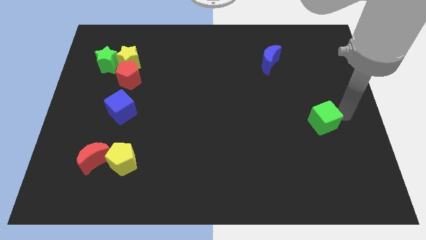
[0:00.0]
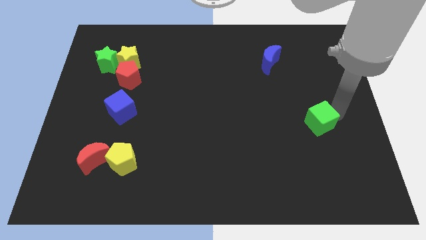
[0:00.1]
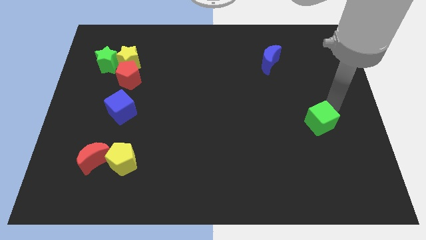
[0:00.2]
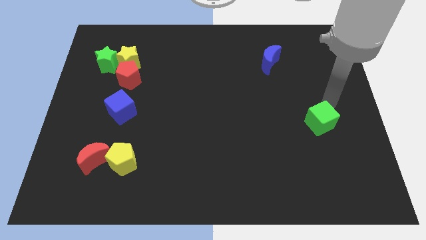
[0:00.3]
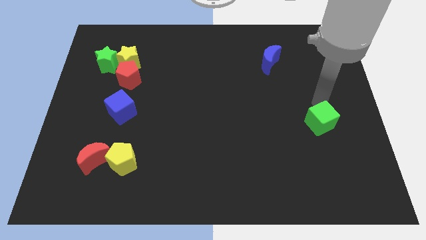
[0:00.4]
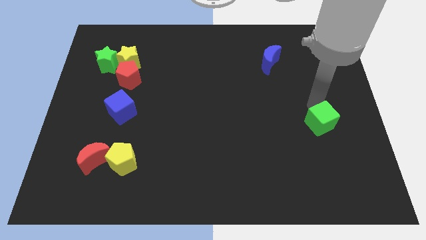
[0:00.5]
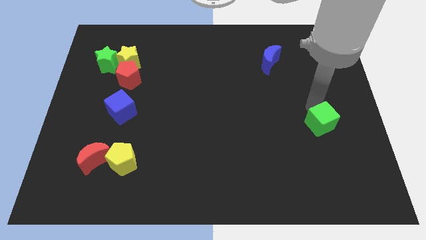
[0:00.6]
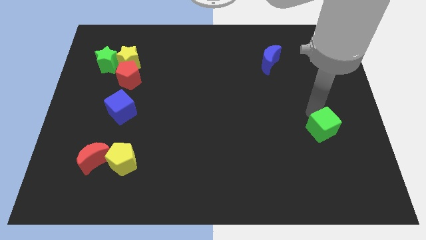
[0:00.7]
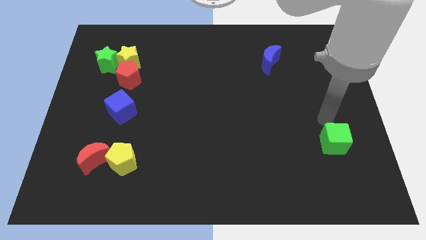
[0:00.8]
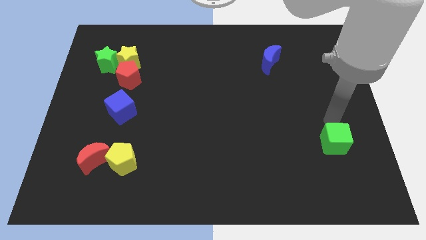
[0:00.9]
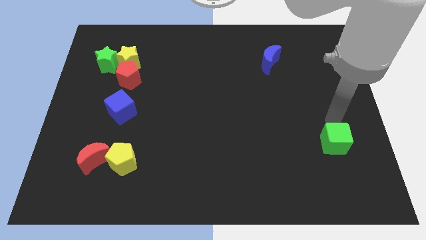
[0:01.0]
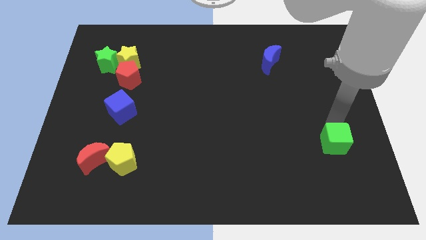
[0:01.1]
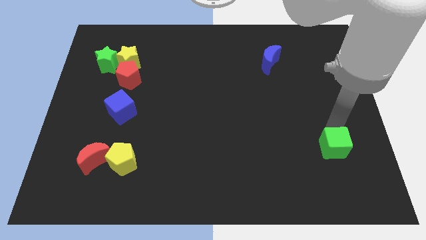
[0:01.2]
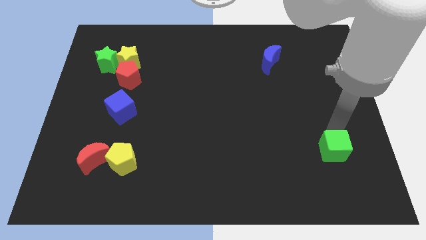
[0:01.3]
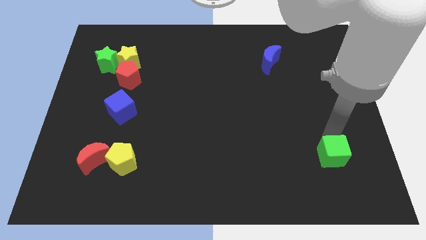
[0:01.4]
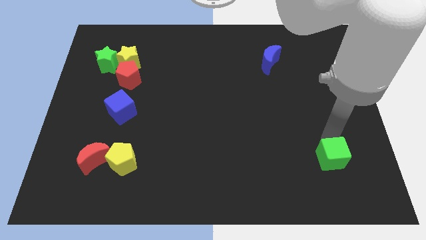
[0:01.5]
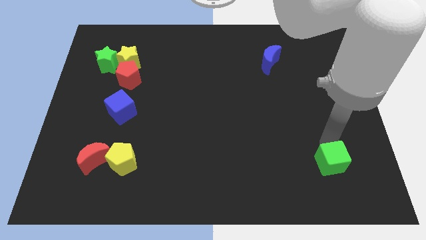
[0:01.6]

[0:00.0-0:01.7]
place the green cube horizontally to the right side of the yellow pentagon

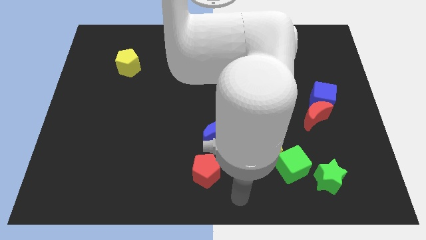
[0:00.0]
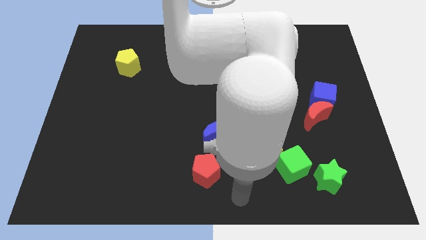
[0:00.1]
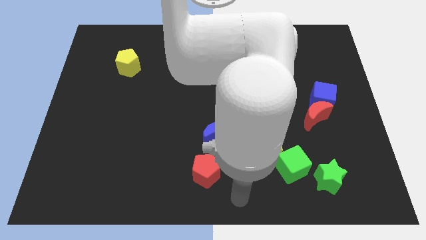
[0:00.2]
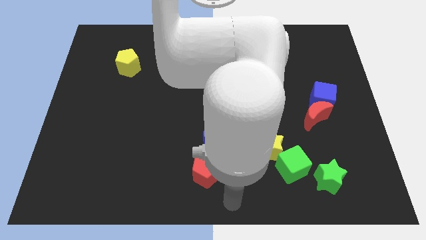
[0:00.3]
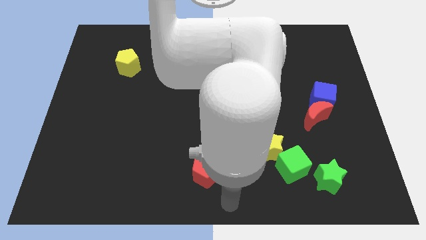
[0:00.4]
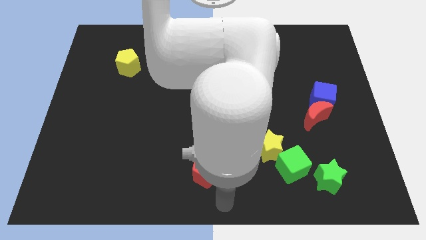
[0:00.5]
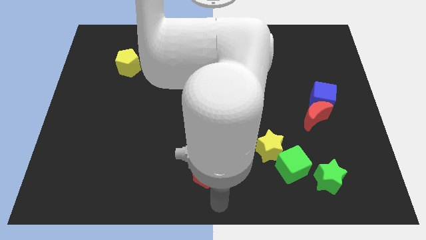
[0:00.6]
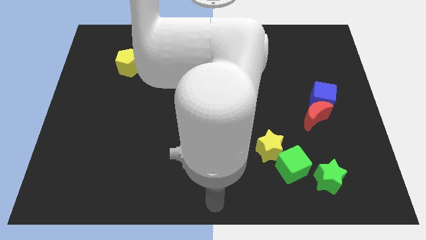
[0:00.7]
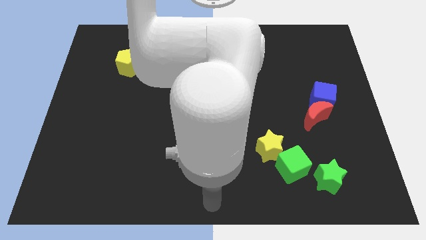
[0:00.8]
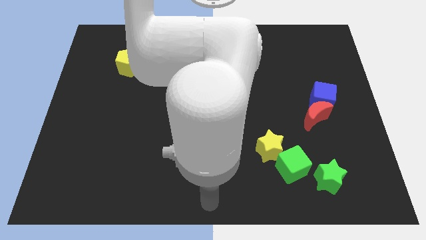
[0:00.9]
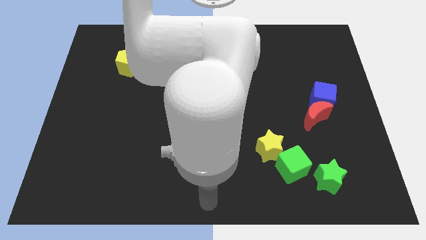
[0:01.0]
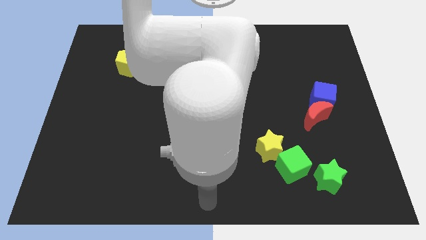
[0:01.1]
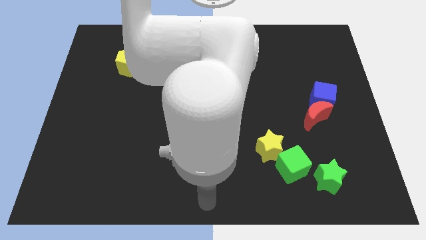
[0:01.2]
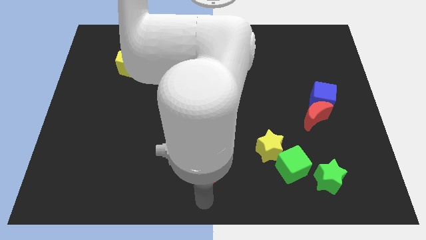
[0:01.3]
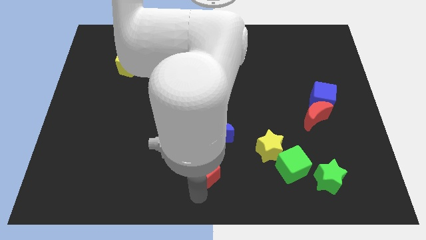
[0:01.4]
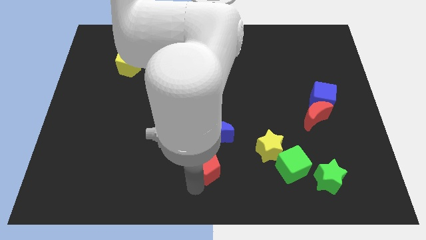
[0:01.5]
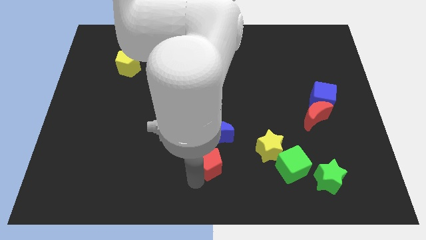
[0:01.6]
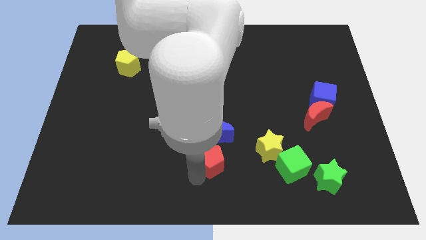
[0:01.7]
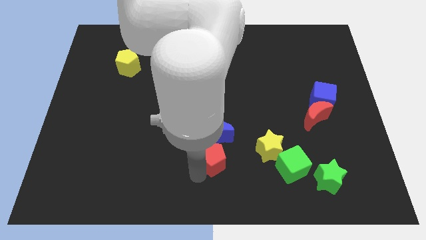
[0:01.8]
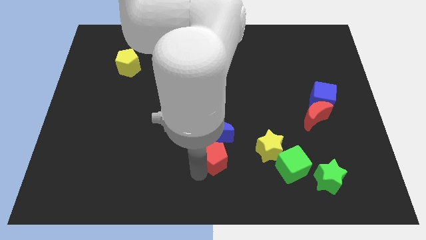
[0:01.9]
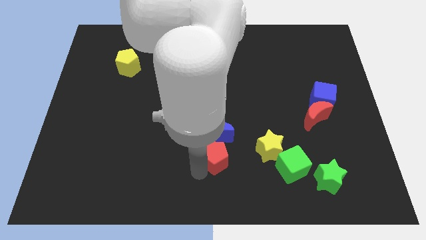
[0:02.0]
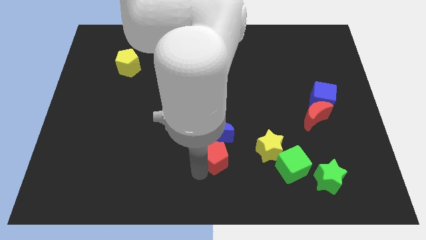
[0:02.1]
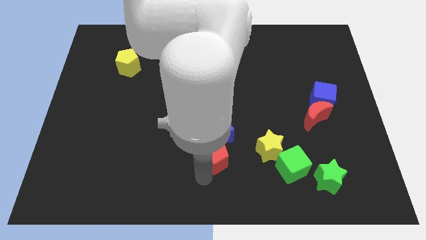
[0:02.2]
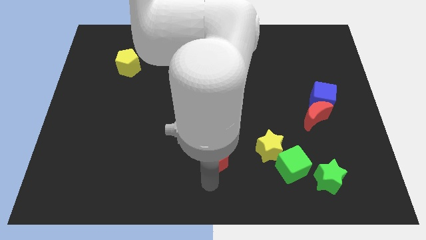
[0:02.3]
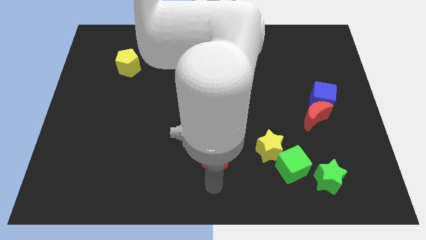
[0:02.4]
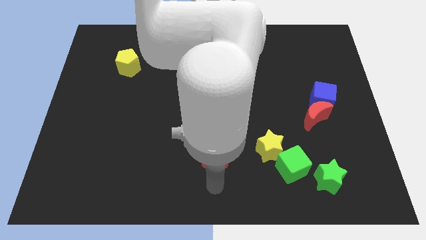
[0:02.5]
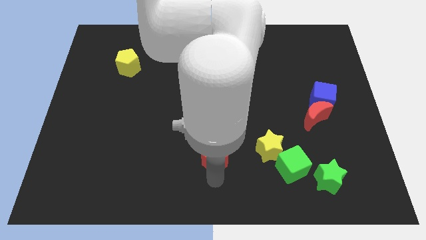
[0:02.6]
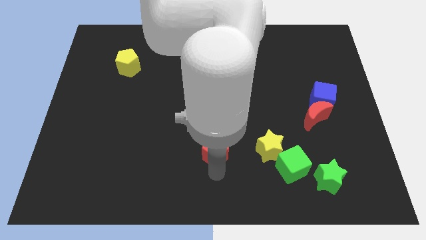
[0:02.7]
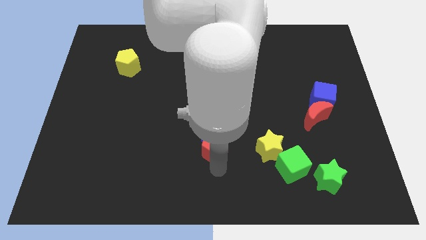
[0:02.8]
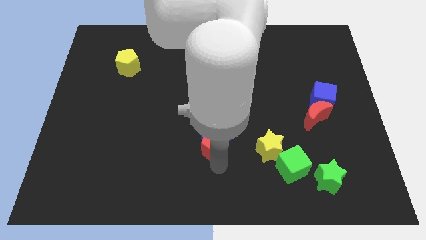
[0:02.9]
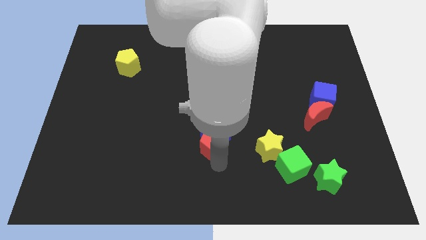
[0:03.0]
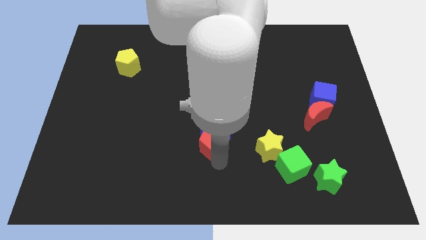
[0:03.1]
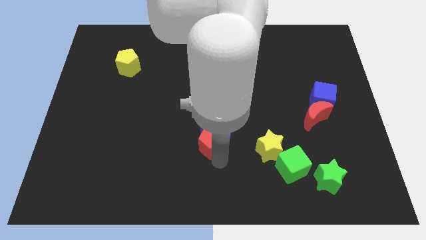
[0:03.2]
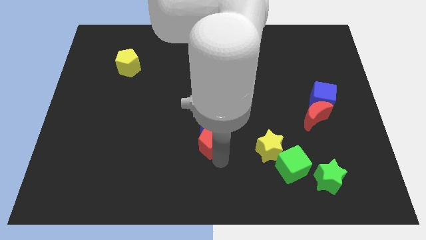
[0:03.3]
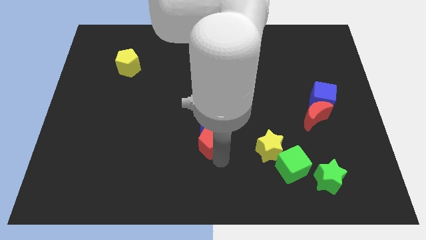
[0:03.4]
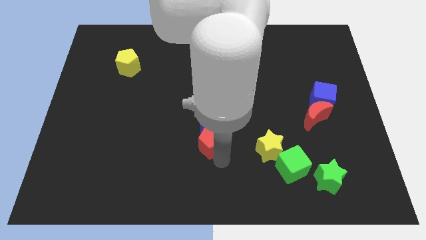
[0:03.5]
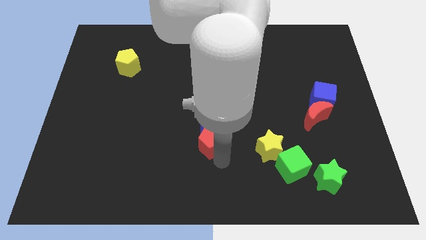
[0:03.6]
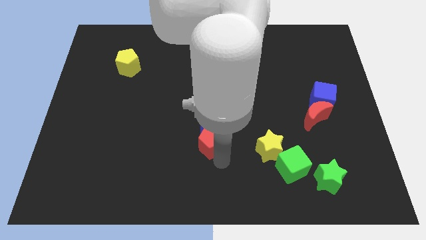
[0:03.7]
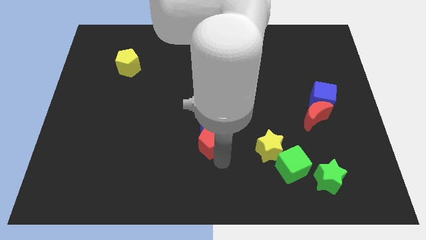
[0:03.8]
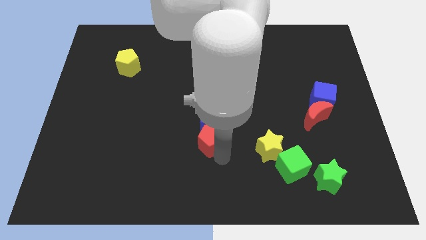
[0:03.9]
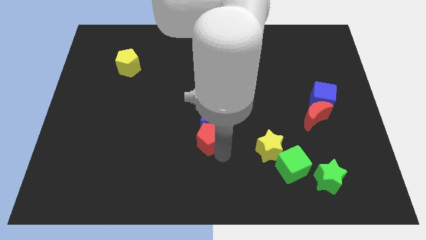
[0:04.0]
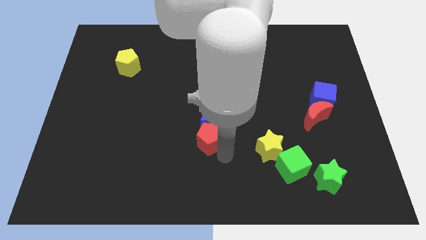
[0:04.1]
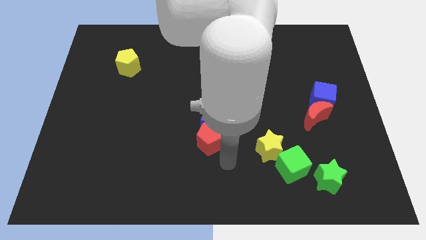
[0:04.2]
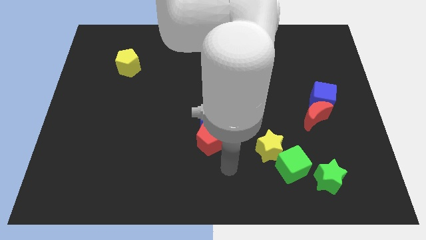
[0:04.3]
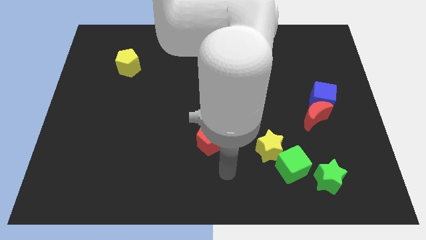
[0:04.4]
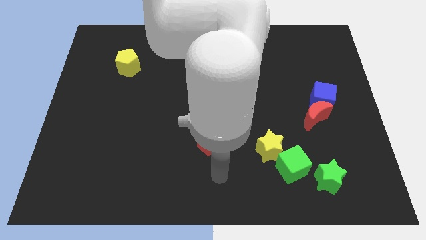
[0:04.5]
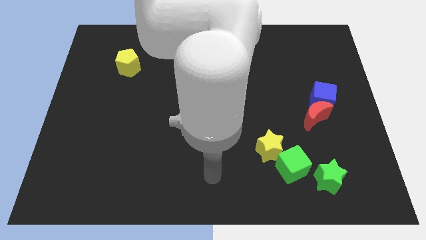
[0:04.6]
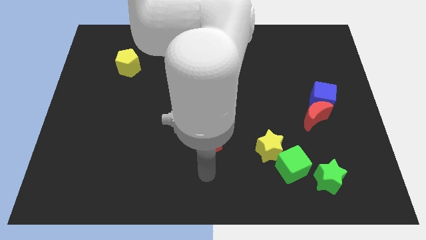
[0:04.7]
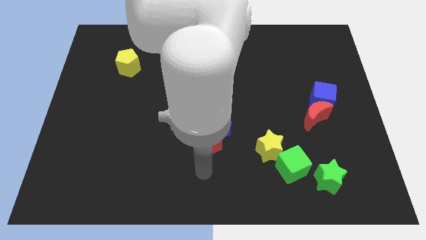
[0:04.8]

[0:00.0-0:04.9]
move red pentagon into blue crescent

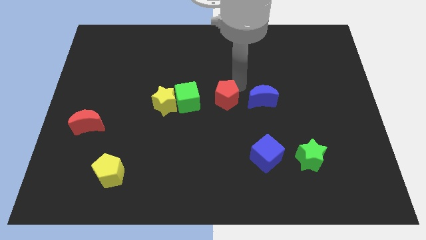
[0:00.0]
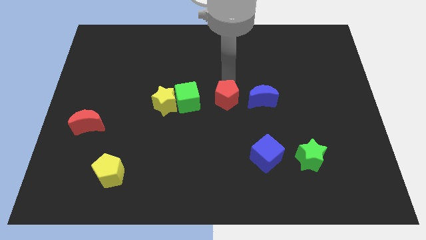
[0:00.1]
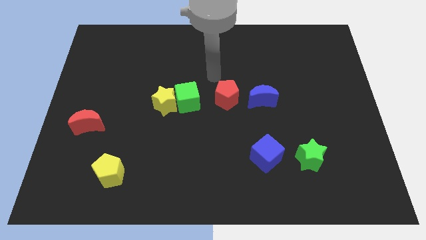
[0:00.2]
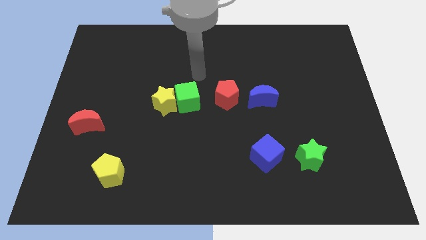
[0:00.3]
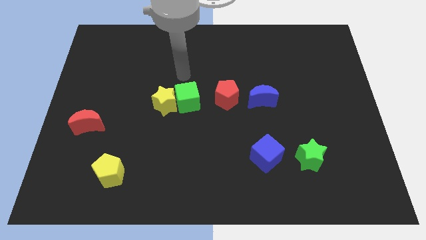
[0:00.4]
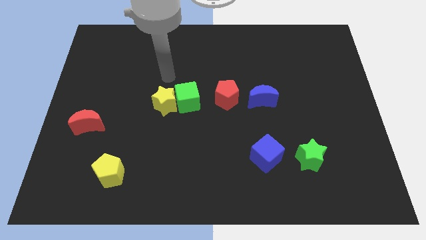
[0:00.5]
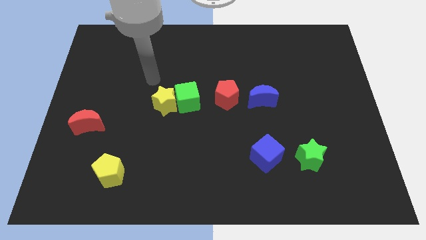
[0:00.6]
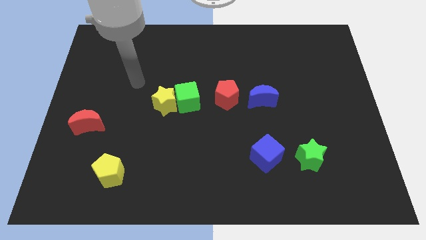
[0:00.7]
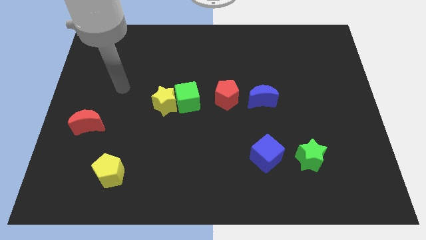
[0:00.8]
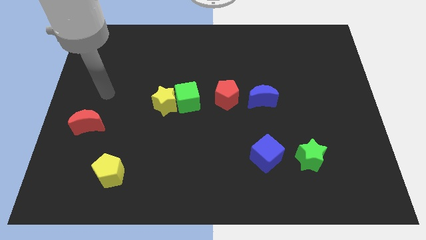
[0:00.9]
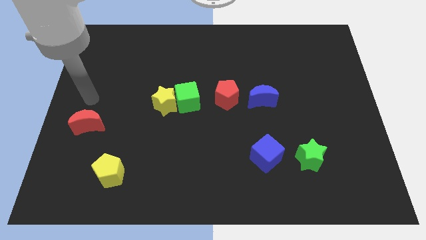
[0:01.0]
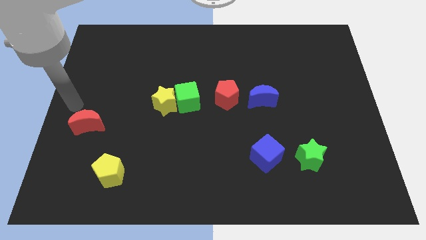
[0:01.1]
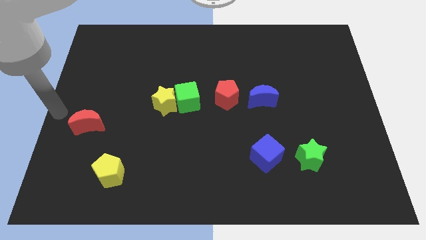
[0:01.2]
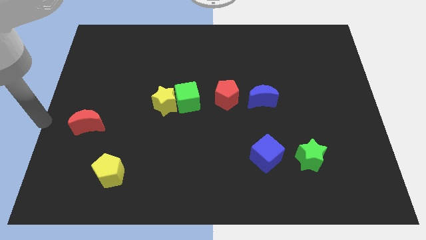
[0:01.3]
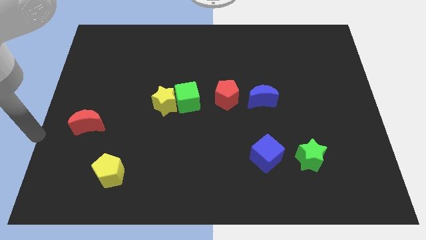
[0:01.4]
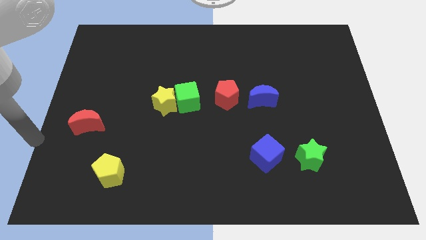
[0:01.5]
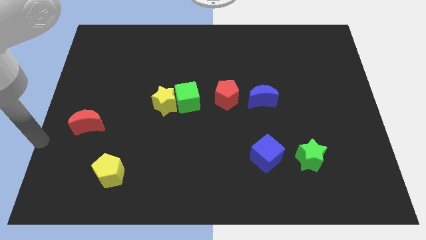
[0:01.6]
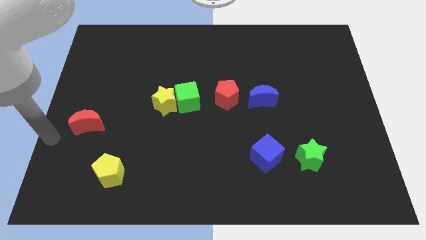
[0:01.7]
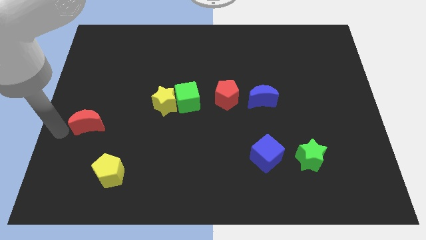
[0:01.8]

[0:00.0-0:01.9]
drag you arm to the left side of the red moon

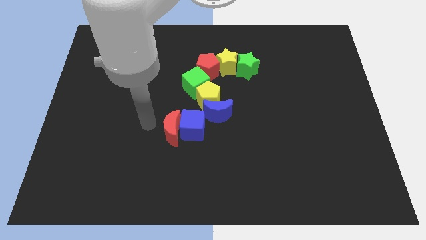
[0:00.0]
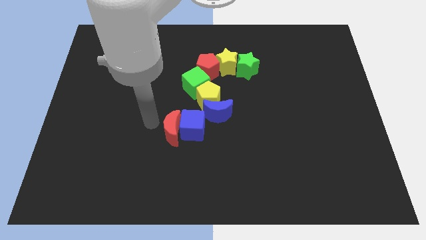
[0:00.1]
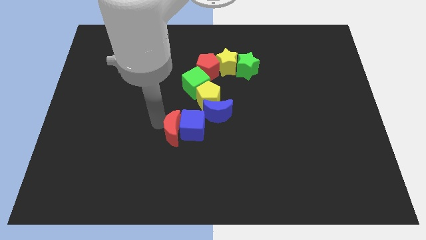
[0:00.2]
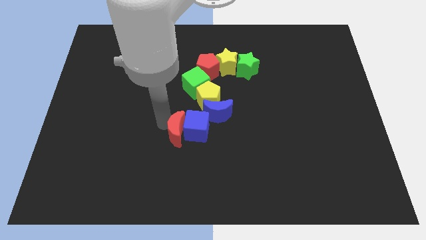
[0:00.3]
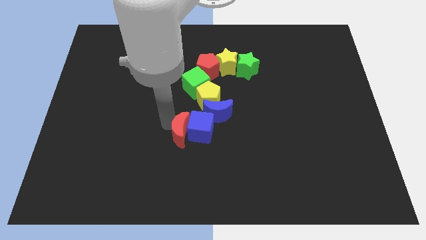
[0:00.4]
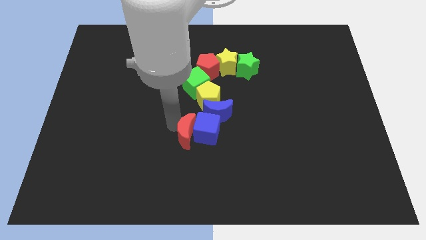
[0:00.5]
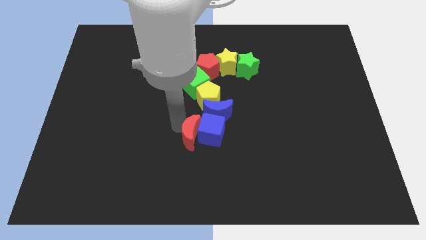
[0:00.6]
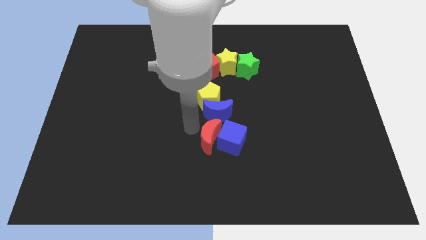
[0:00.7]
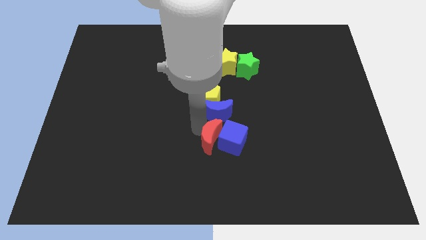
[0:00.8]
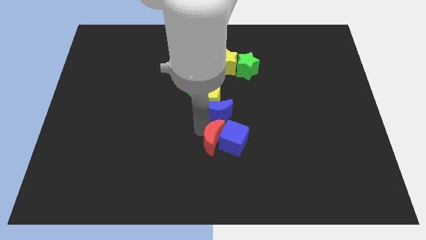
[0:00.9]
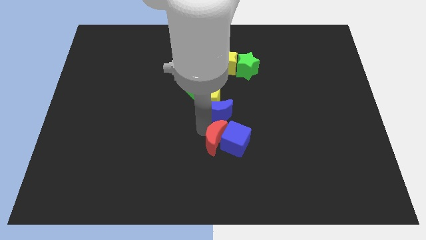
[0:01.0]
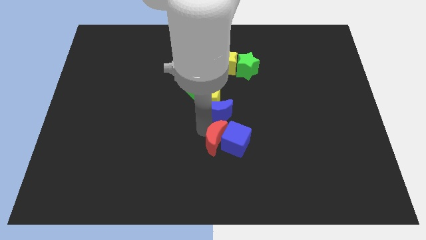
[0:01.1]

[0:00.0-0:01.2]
move the red crescent and blue crescent slightly to the right
